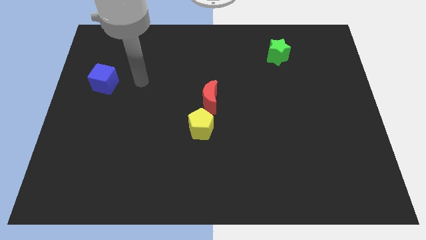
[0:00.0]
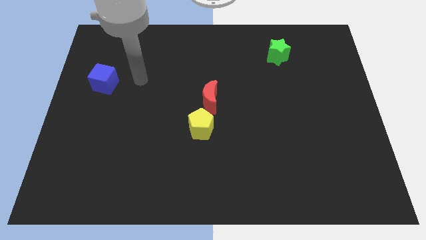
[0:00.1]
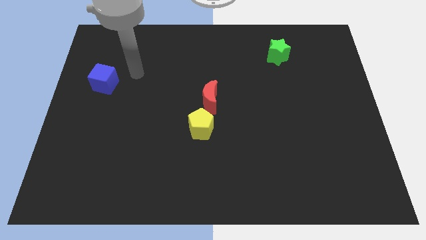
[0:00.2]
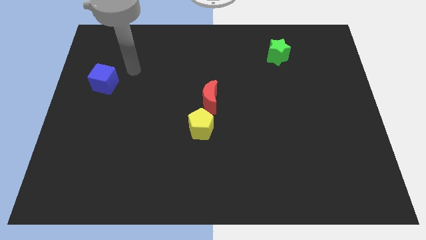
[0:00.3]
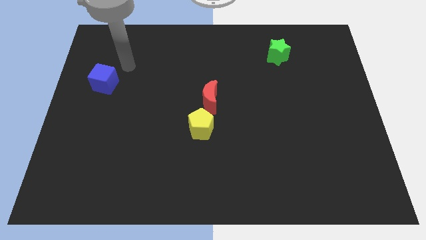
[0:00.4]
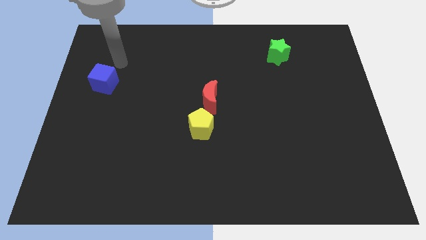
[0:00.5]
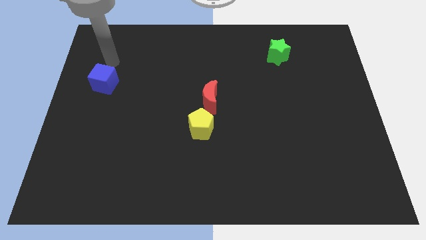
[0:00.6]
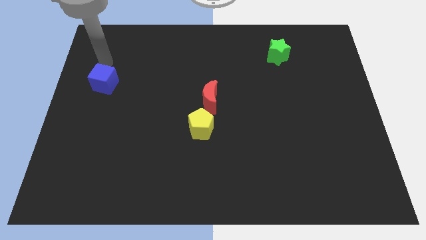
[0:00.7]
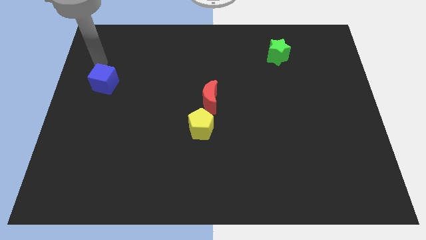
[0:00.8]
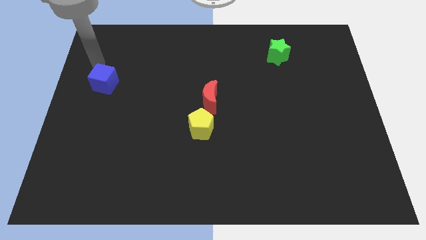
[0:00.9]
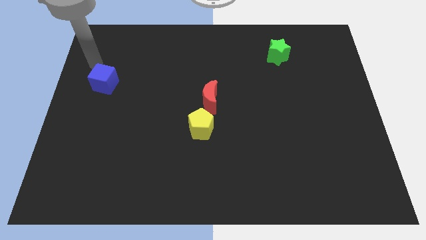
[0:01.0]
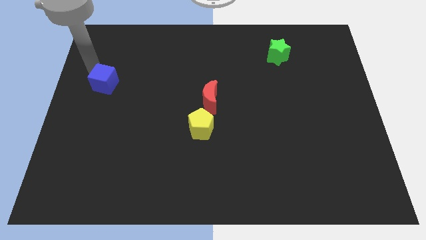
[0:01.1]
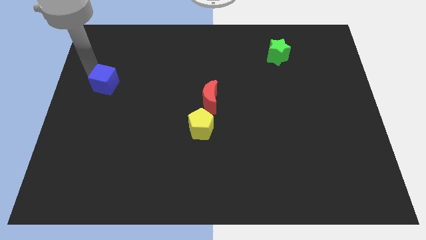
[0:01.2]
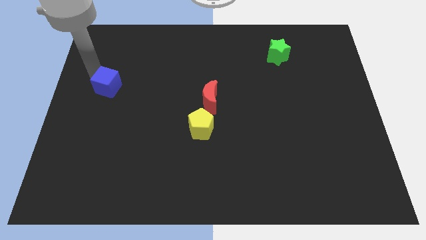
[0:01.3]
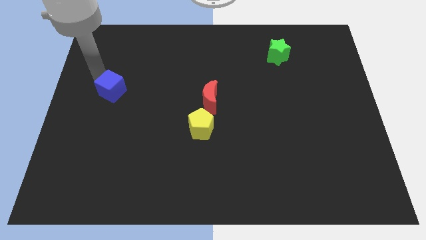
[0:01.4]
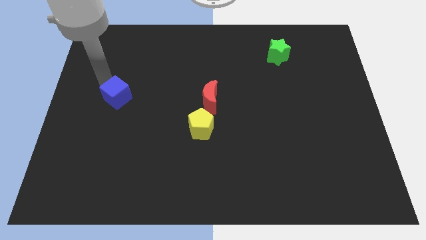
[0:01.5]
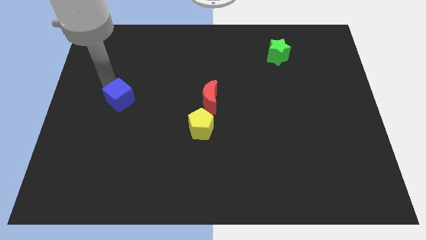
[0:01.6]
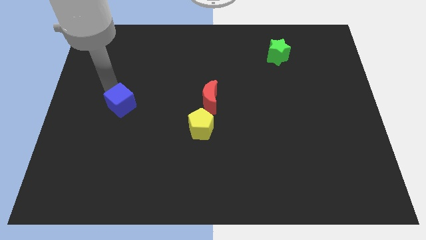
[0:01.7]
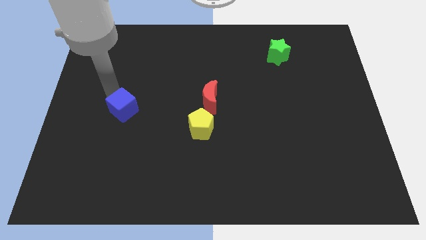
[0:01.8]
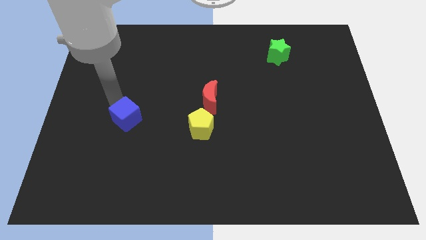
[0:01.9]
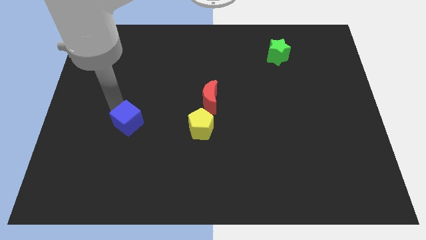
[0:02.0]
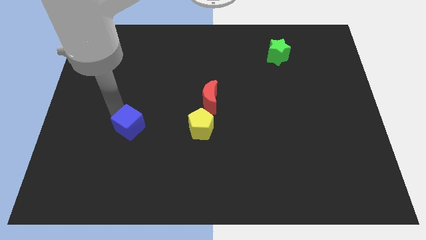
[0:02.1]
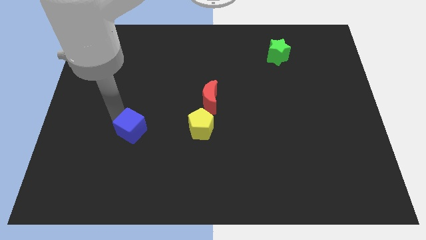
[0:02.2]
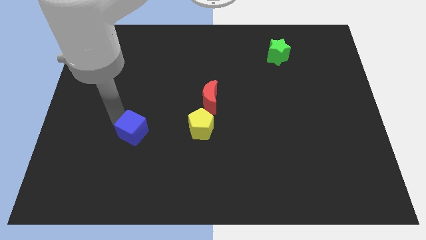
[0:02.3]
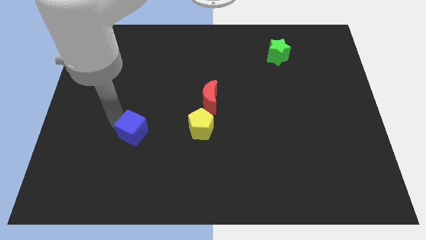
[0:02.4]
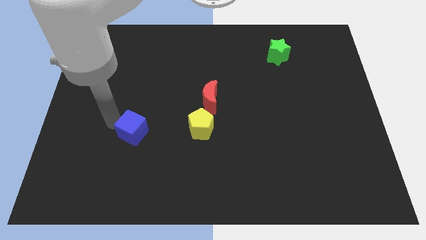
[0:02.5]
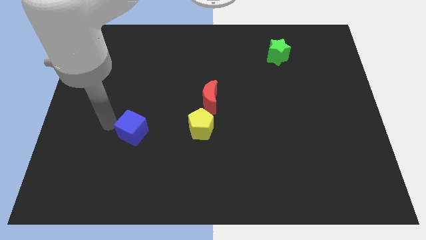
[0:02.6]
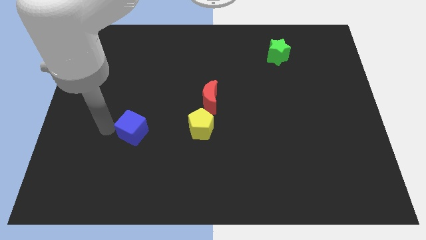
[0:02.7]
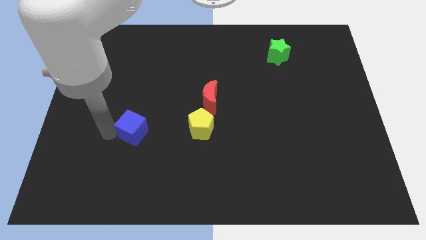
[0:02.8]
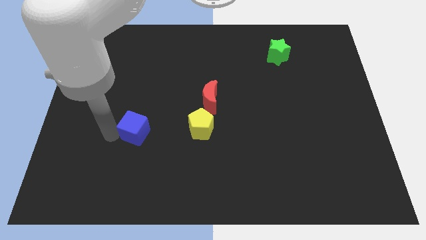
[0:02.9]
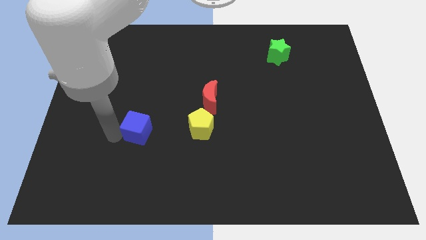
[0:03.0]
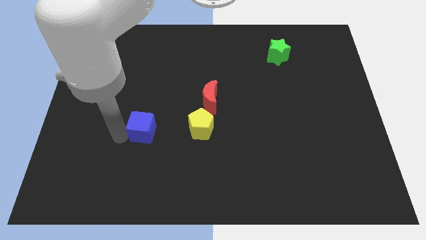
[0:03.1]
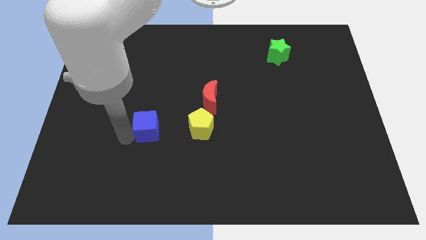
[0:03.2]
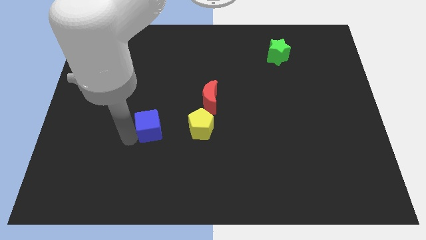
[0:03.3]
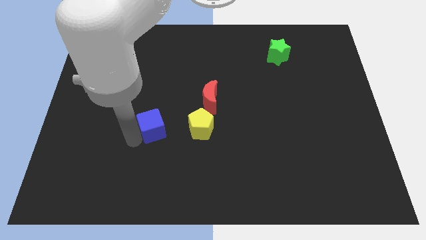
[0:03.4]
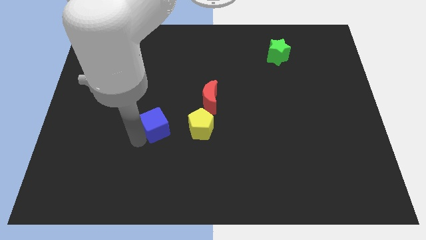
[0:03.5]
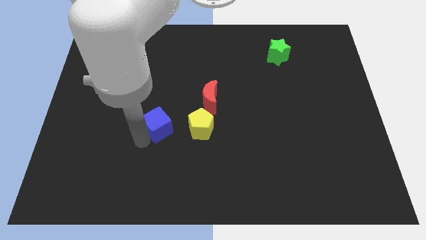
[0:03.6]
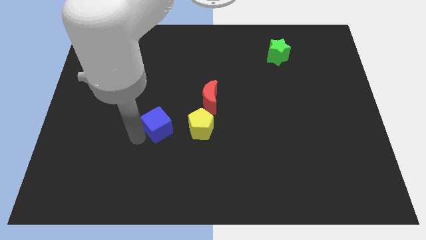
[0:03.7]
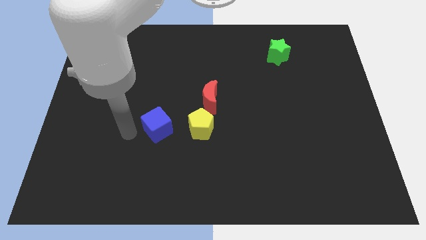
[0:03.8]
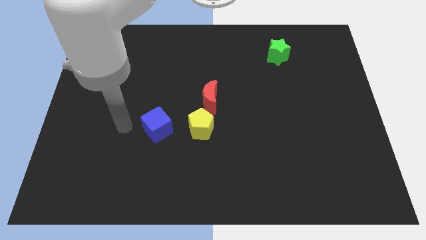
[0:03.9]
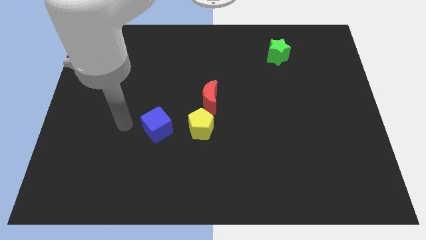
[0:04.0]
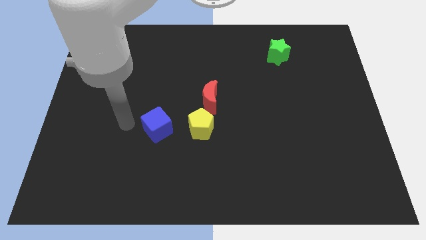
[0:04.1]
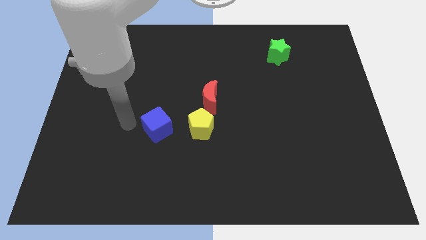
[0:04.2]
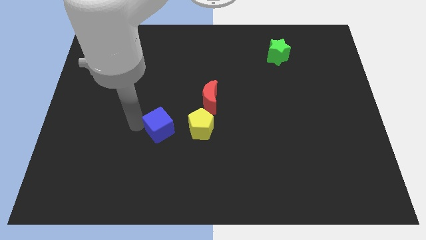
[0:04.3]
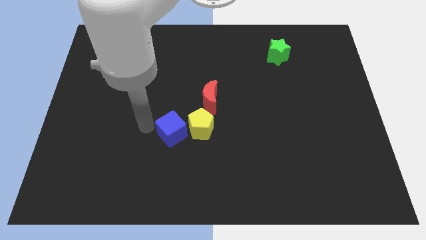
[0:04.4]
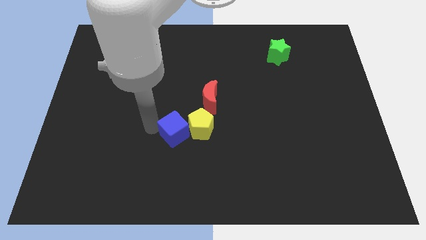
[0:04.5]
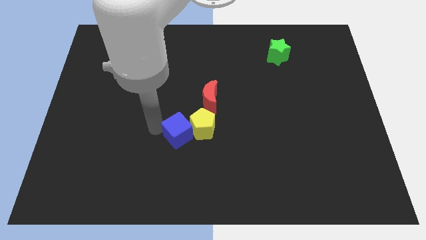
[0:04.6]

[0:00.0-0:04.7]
move the blue block next to the pentagon

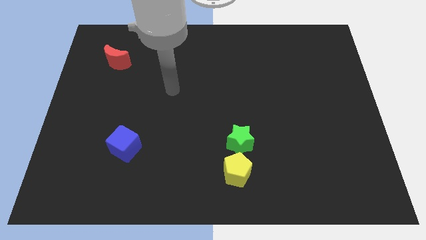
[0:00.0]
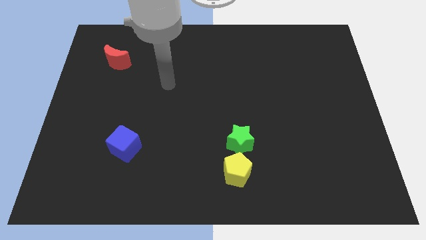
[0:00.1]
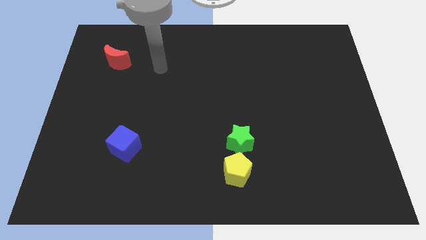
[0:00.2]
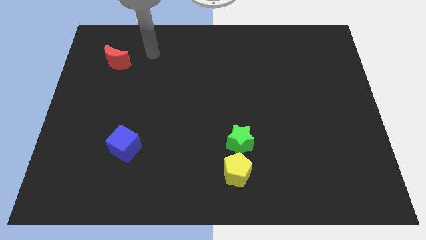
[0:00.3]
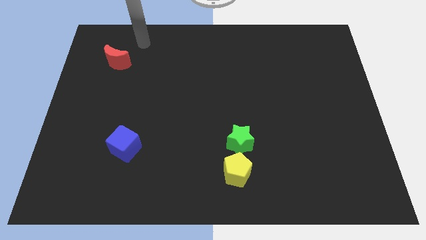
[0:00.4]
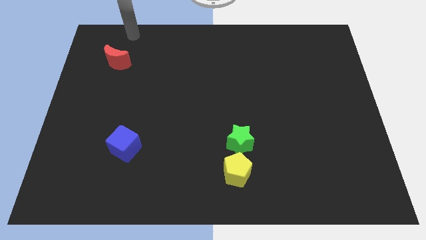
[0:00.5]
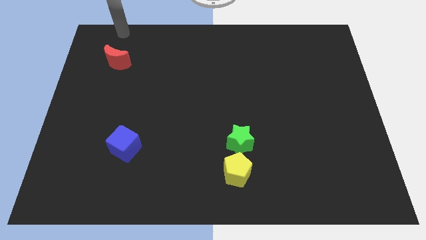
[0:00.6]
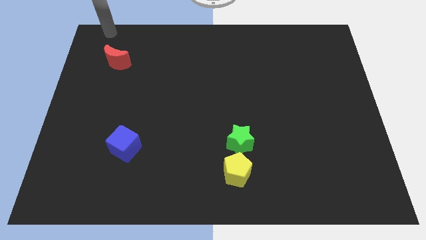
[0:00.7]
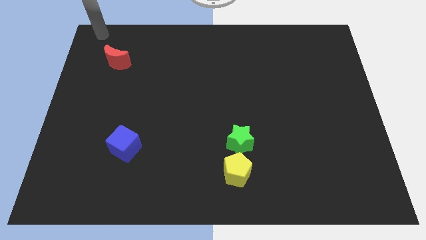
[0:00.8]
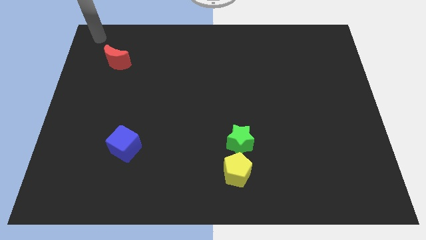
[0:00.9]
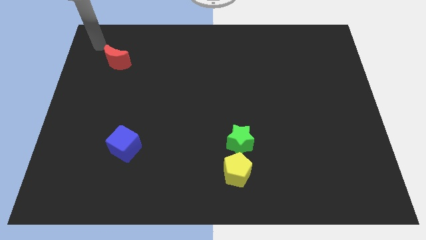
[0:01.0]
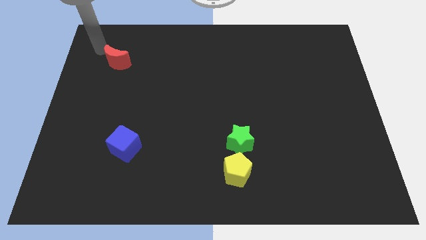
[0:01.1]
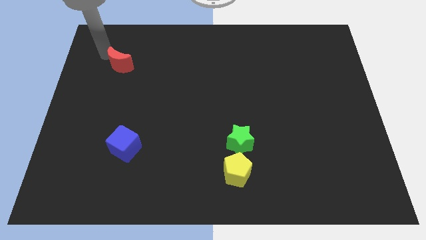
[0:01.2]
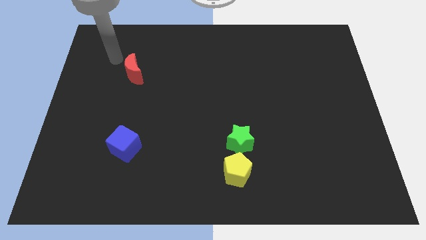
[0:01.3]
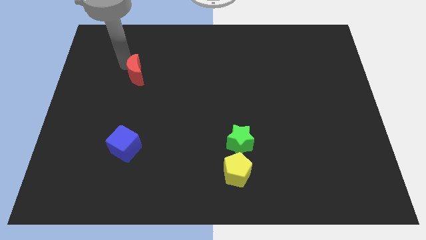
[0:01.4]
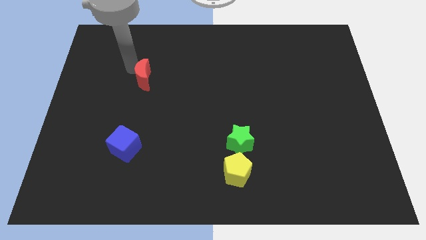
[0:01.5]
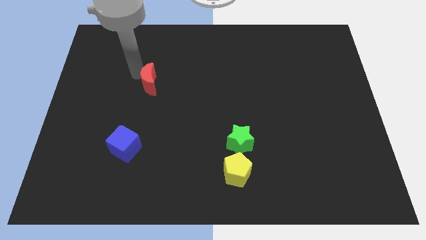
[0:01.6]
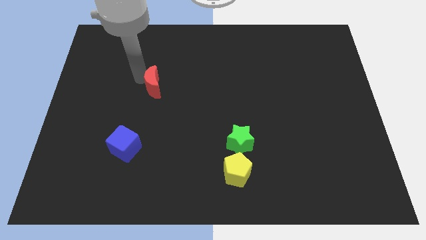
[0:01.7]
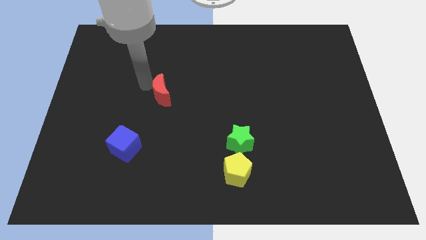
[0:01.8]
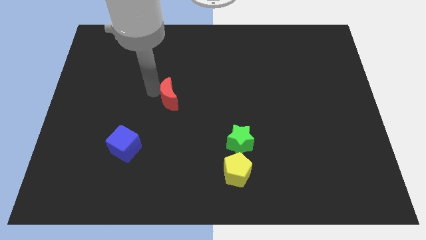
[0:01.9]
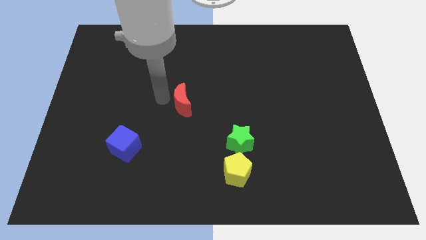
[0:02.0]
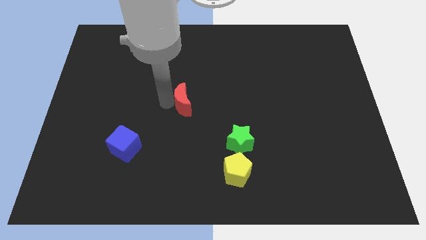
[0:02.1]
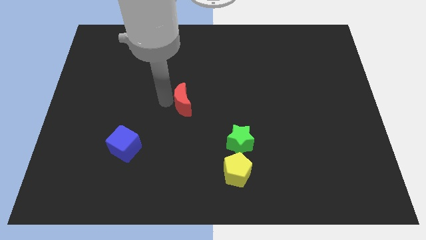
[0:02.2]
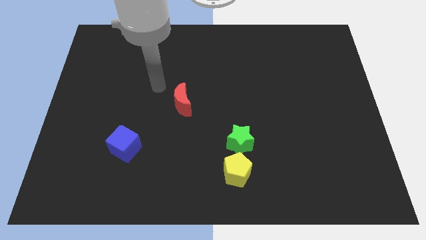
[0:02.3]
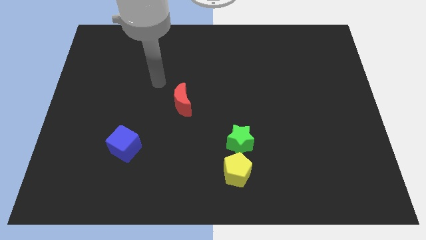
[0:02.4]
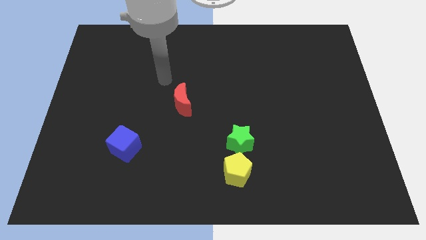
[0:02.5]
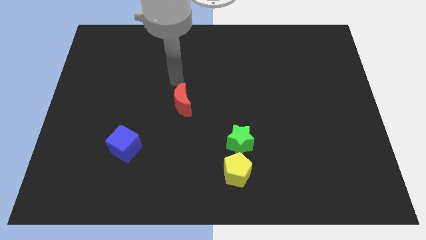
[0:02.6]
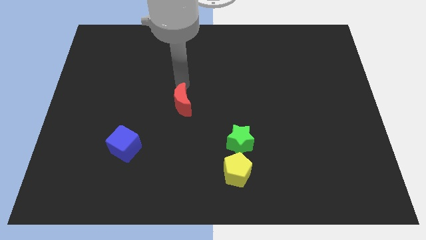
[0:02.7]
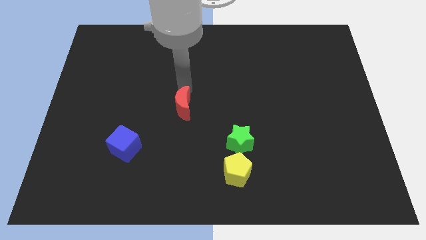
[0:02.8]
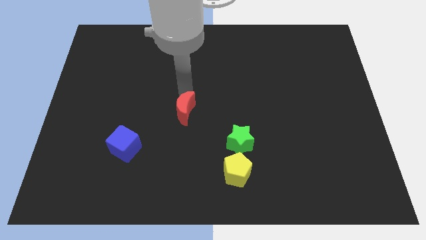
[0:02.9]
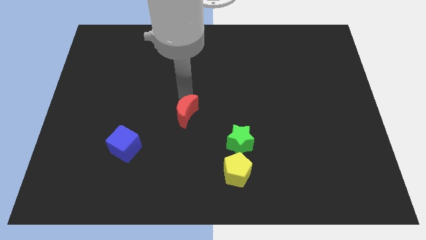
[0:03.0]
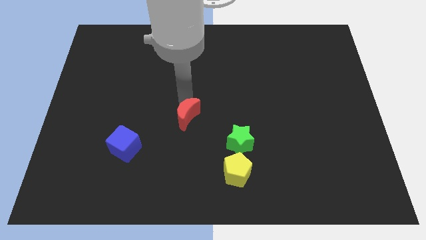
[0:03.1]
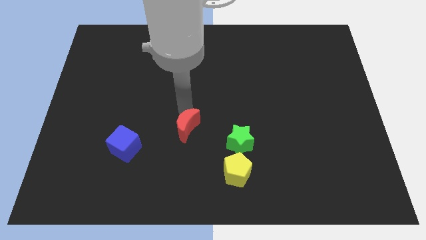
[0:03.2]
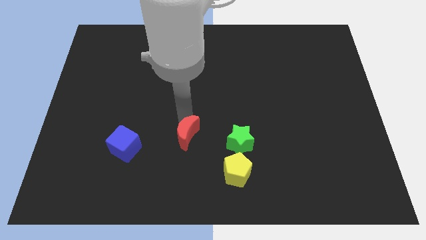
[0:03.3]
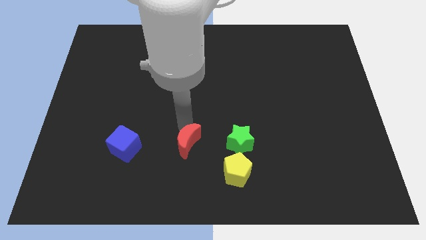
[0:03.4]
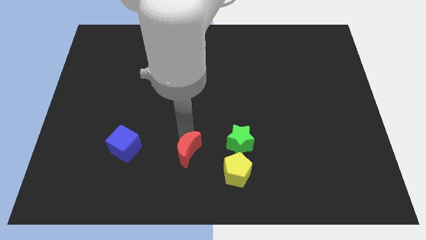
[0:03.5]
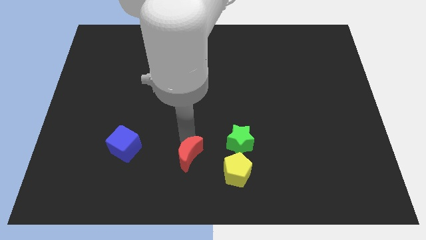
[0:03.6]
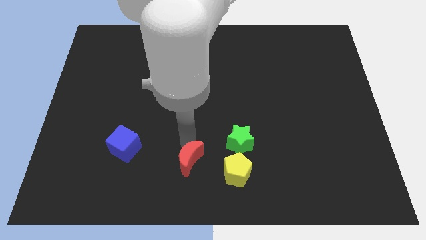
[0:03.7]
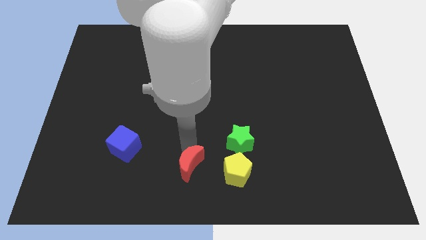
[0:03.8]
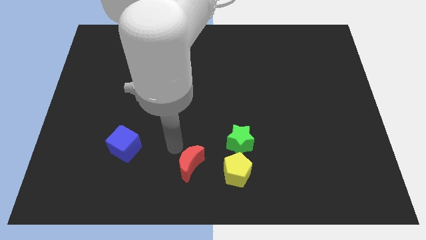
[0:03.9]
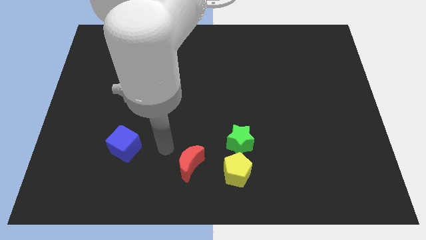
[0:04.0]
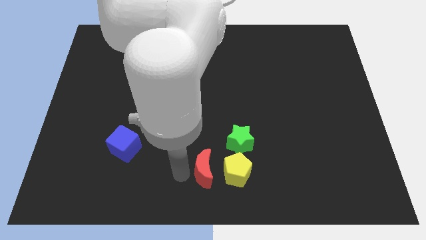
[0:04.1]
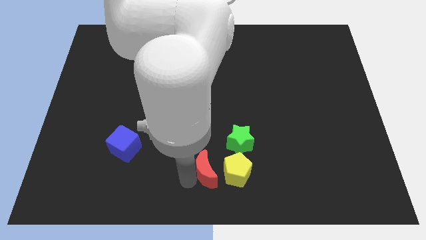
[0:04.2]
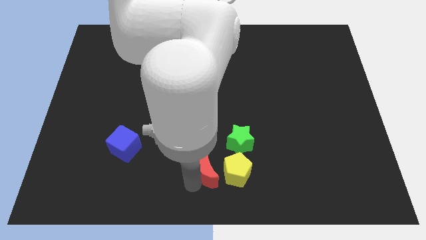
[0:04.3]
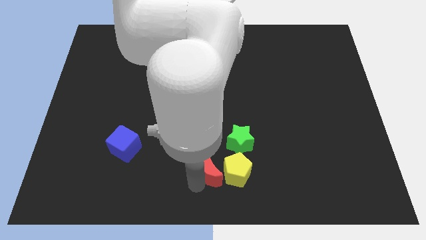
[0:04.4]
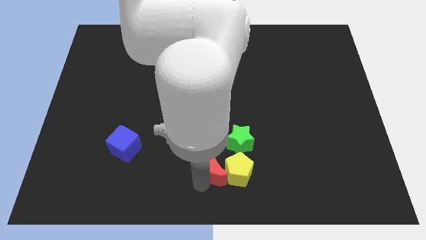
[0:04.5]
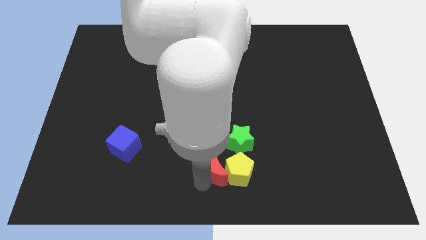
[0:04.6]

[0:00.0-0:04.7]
push the red block next to the pentagon
